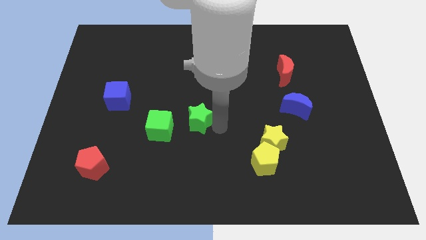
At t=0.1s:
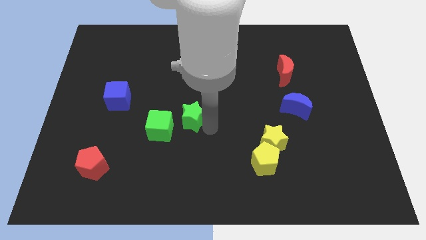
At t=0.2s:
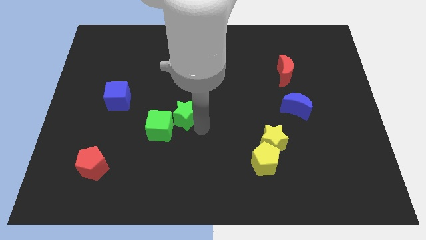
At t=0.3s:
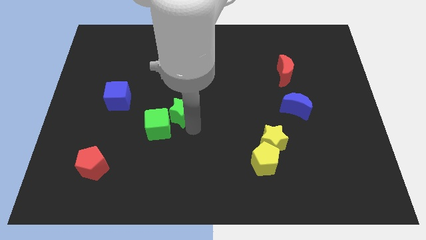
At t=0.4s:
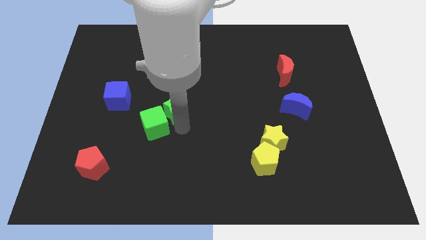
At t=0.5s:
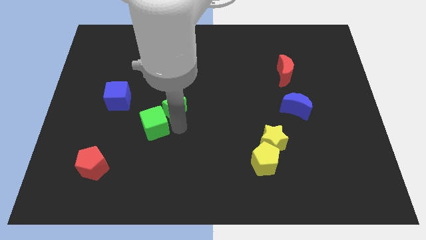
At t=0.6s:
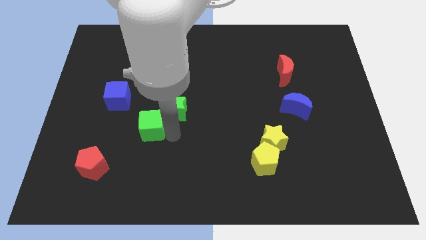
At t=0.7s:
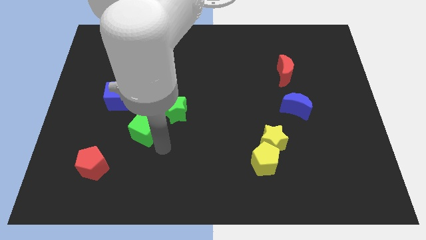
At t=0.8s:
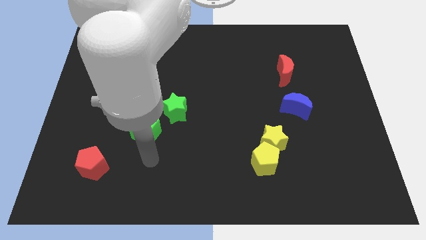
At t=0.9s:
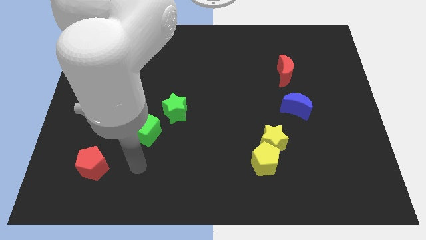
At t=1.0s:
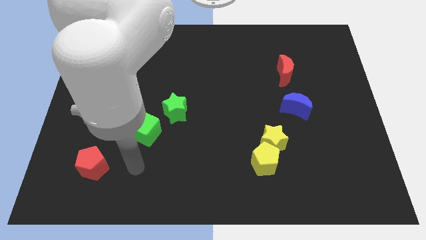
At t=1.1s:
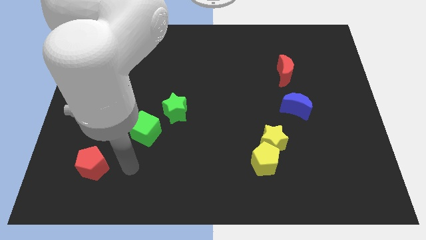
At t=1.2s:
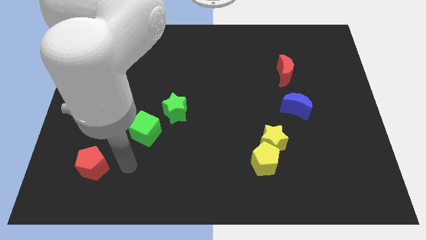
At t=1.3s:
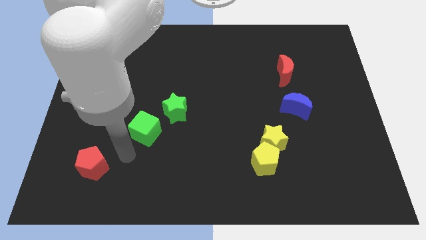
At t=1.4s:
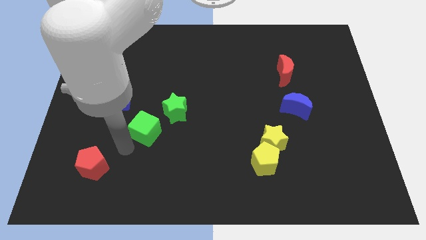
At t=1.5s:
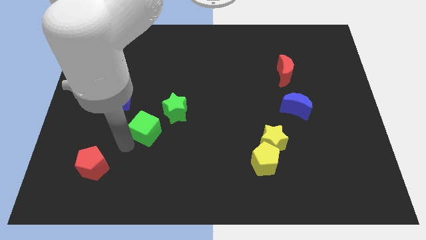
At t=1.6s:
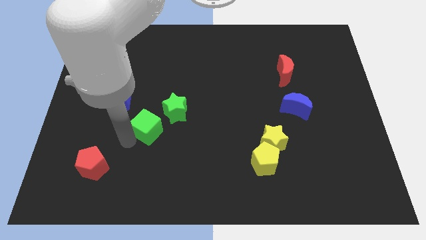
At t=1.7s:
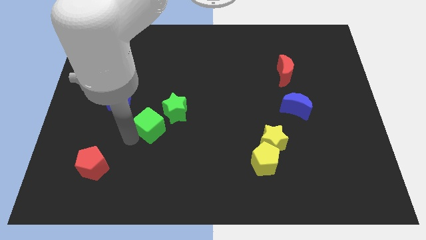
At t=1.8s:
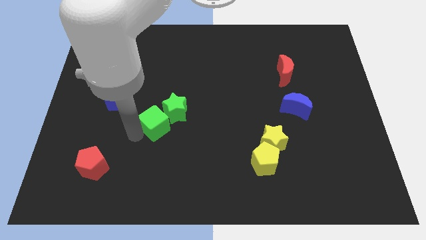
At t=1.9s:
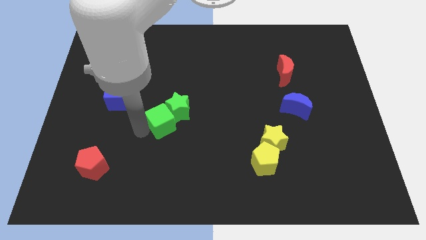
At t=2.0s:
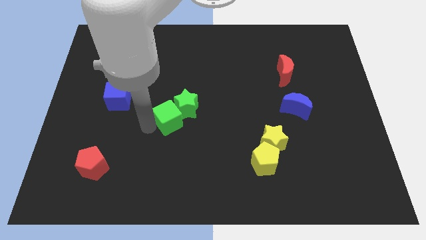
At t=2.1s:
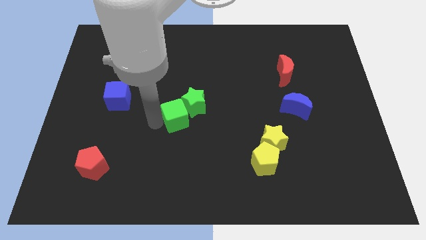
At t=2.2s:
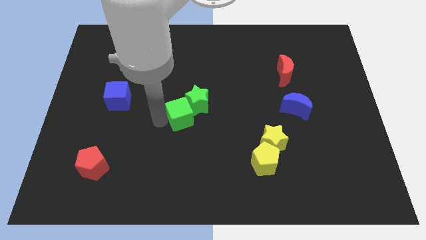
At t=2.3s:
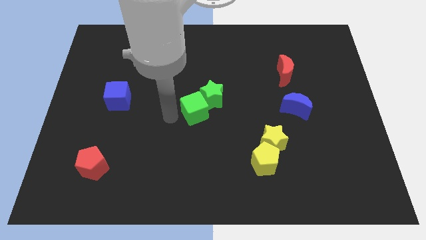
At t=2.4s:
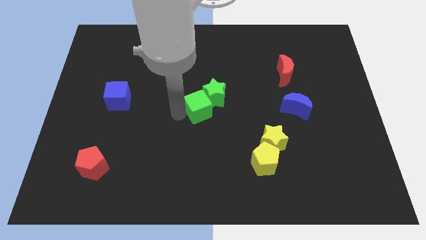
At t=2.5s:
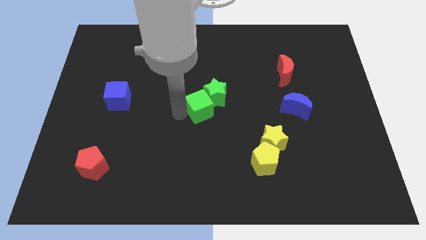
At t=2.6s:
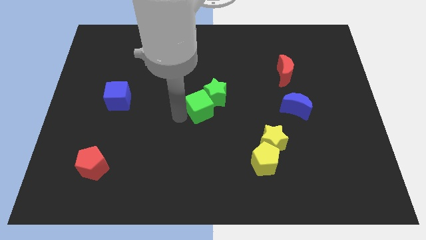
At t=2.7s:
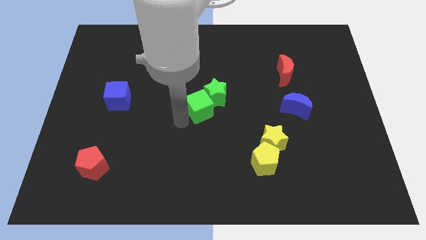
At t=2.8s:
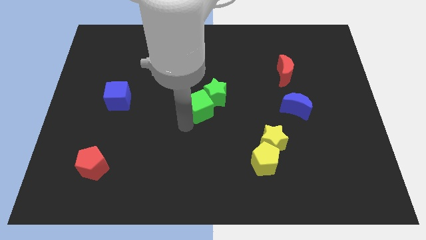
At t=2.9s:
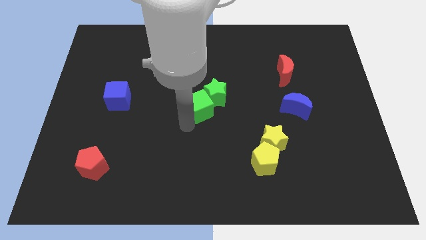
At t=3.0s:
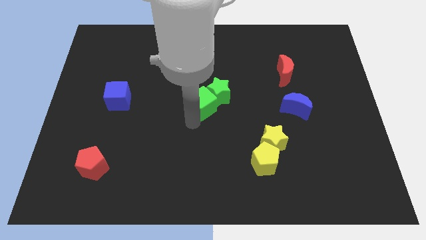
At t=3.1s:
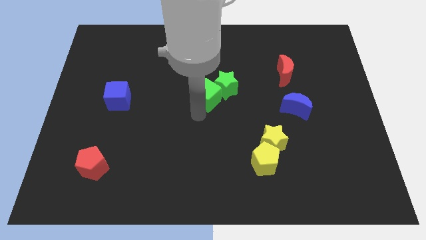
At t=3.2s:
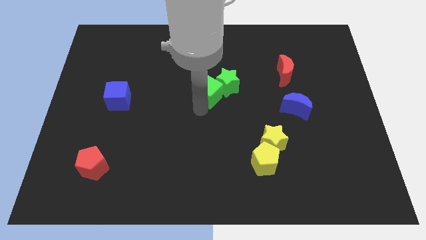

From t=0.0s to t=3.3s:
move green blocks in the center

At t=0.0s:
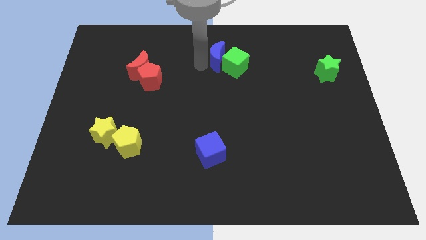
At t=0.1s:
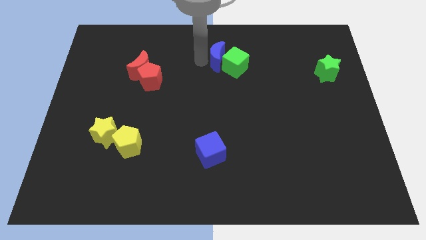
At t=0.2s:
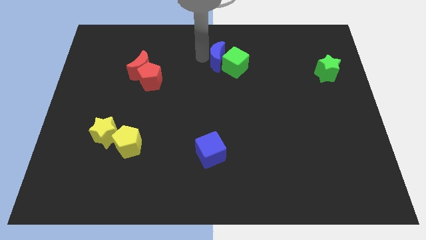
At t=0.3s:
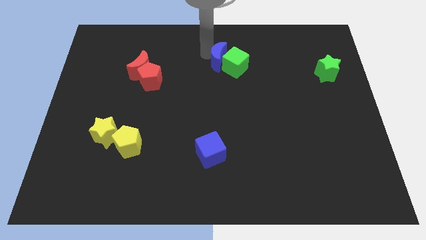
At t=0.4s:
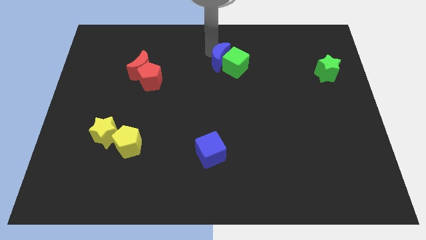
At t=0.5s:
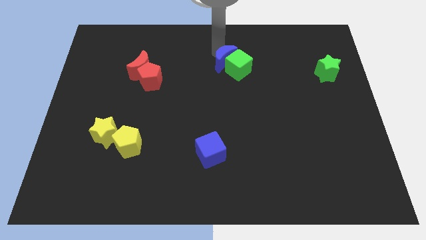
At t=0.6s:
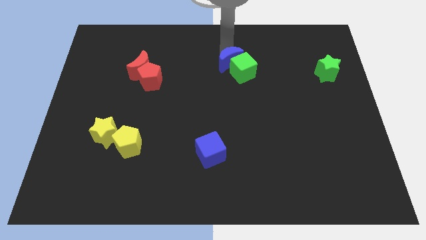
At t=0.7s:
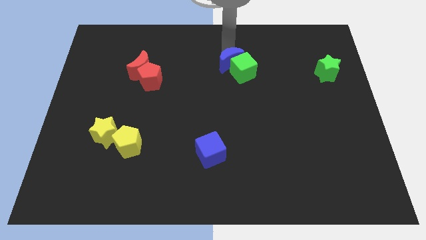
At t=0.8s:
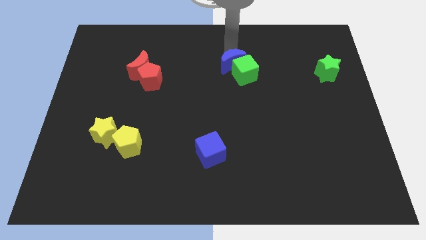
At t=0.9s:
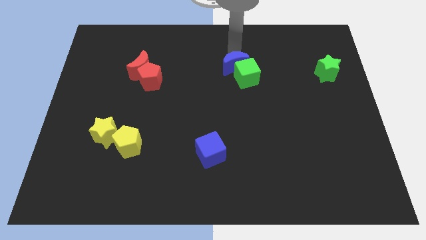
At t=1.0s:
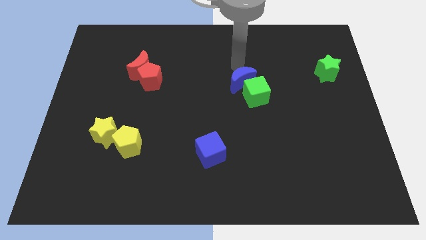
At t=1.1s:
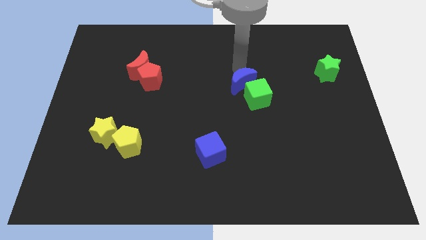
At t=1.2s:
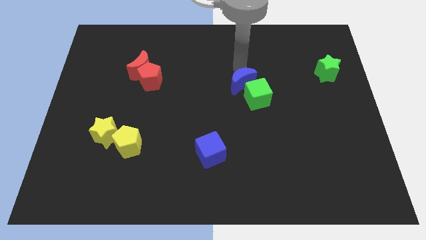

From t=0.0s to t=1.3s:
slide the blue moon and green cube to the center

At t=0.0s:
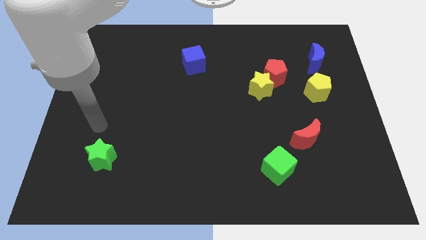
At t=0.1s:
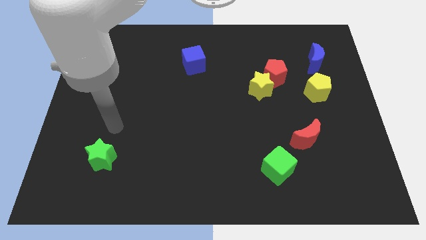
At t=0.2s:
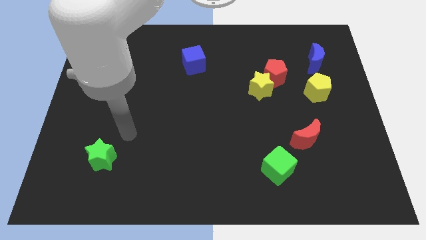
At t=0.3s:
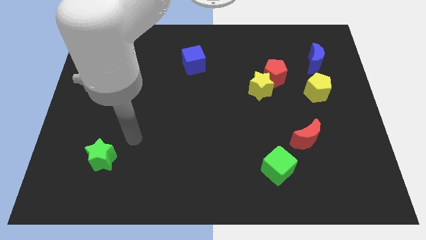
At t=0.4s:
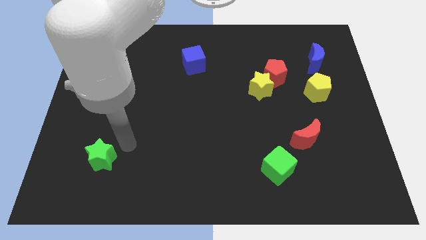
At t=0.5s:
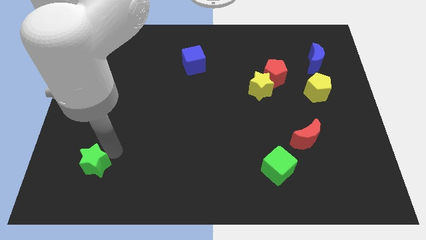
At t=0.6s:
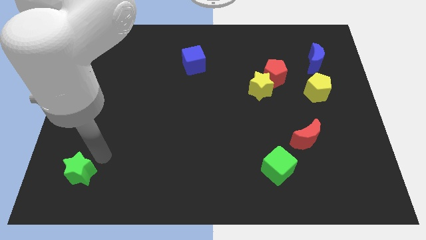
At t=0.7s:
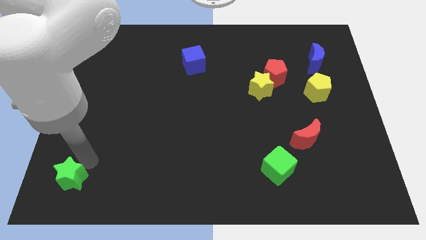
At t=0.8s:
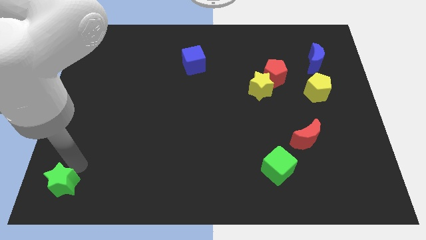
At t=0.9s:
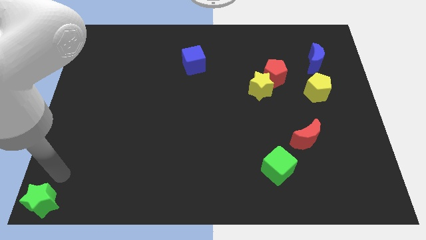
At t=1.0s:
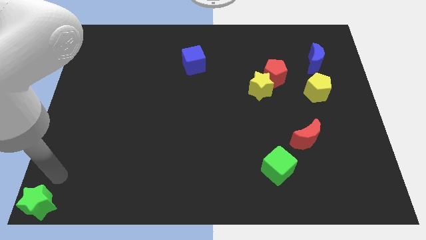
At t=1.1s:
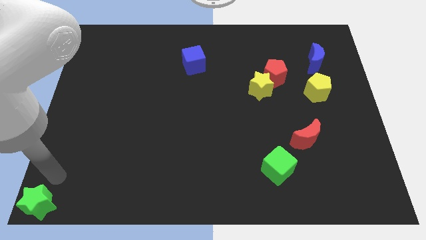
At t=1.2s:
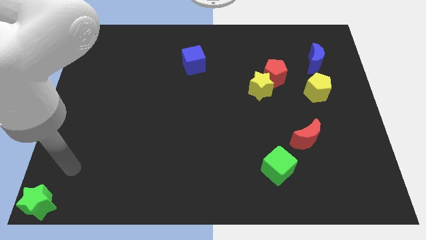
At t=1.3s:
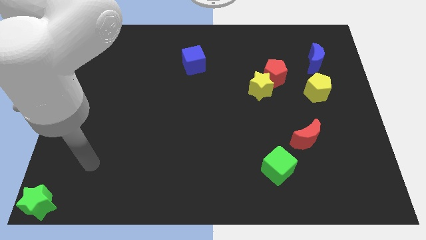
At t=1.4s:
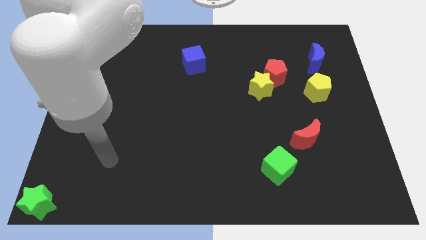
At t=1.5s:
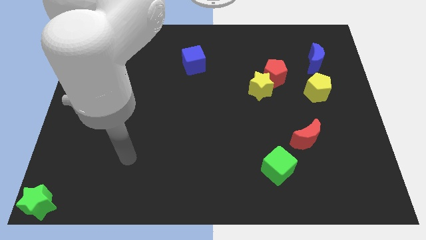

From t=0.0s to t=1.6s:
put the green star at the bottom left corner

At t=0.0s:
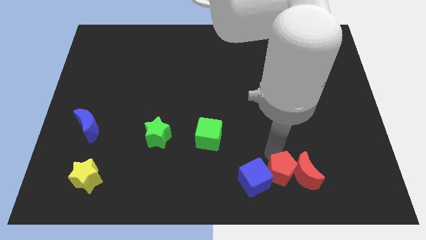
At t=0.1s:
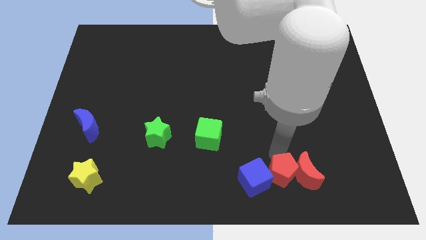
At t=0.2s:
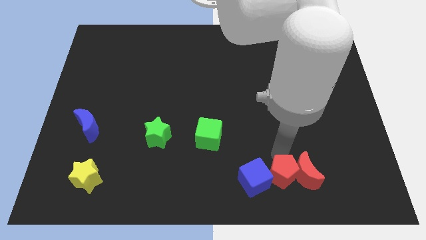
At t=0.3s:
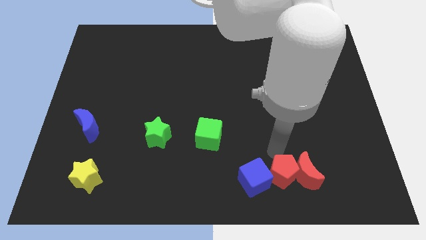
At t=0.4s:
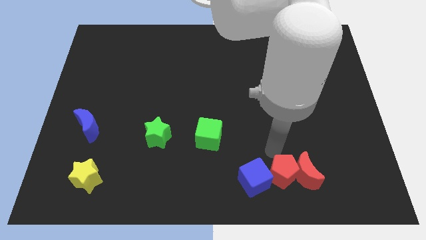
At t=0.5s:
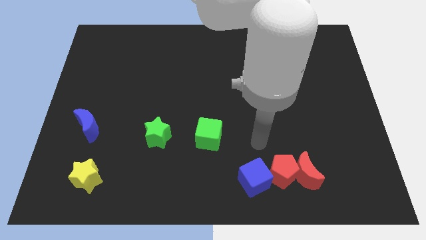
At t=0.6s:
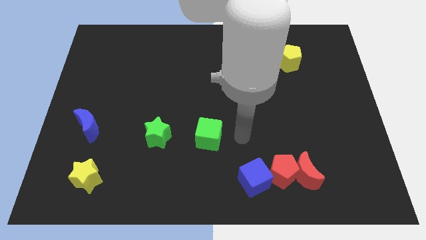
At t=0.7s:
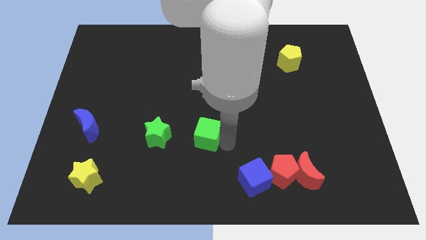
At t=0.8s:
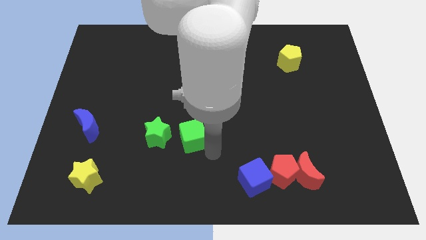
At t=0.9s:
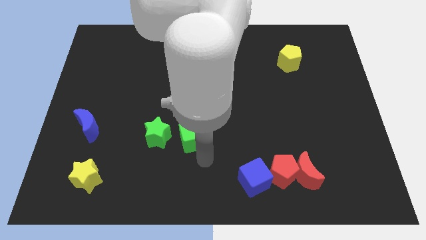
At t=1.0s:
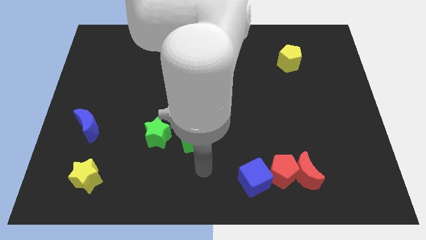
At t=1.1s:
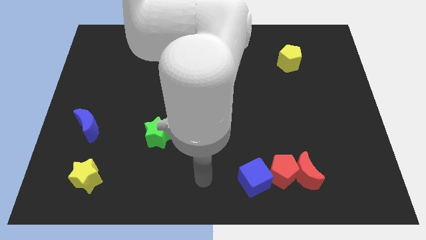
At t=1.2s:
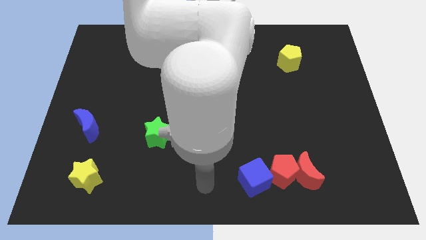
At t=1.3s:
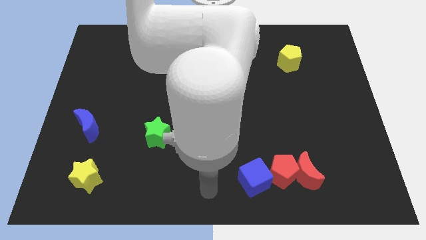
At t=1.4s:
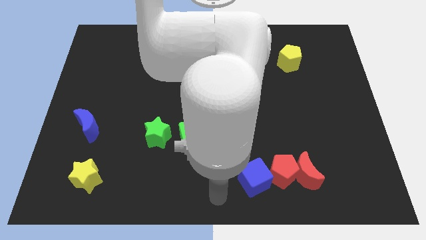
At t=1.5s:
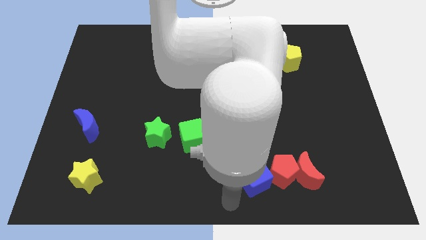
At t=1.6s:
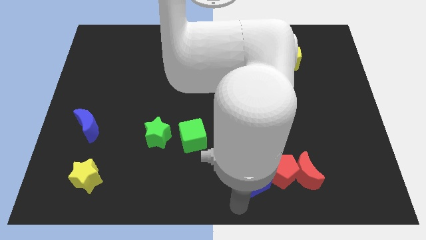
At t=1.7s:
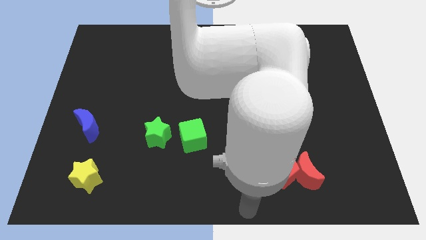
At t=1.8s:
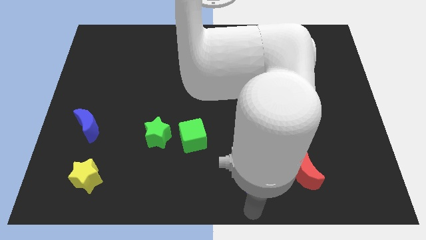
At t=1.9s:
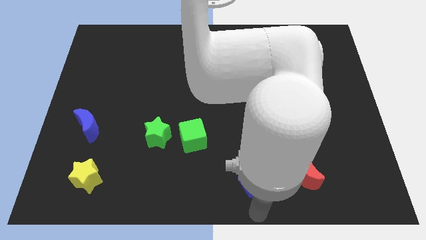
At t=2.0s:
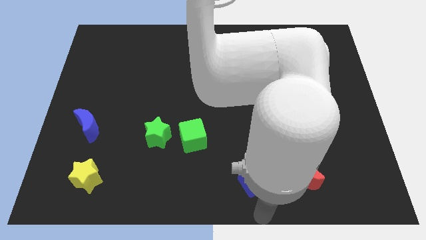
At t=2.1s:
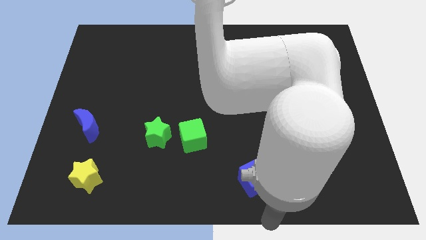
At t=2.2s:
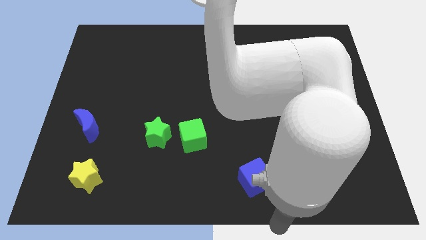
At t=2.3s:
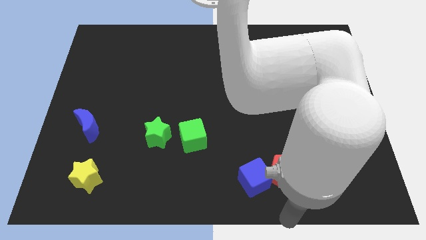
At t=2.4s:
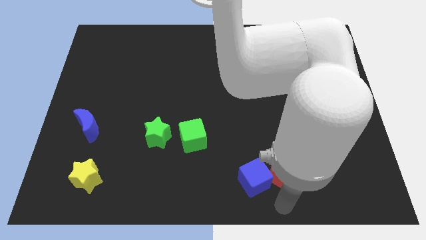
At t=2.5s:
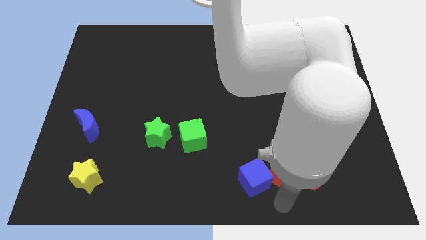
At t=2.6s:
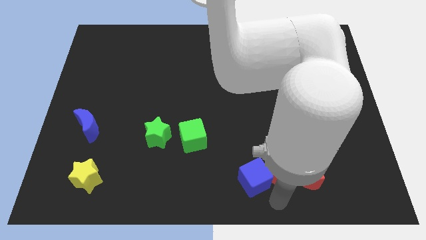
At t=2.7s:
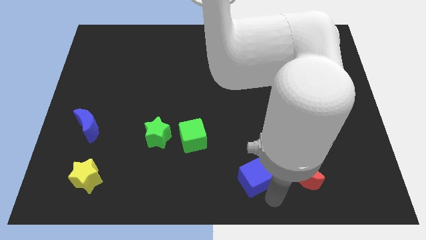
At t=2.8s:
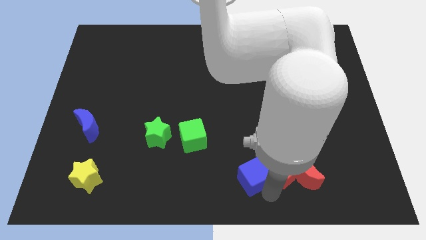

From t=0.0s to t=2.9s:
slightly push the green cube to green star
